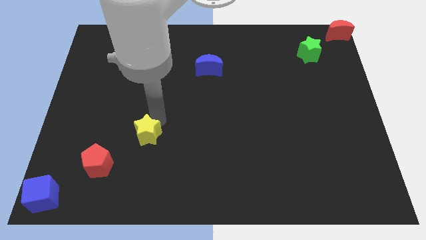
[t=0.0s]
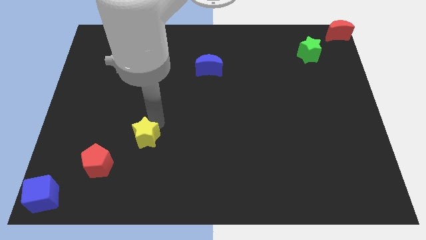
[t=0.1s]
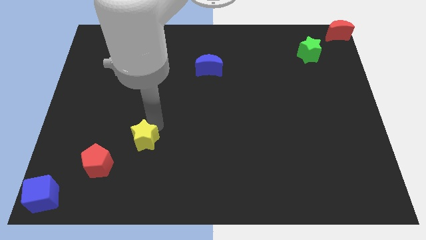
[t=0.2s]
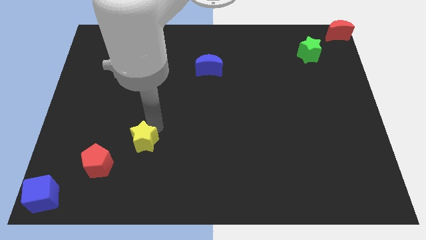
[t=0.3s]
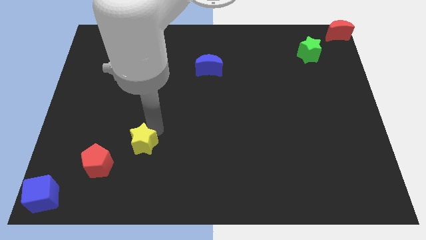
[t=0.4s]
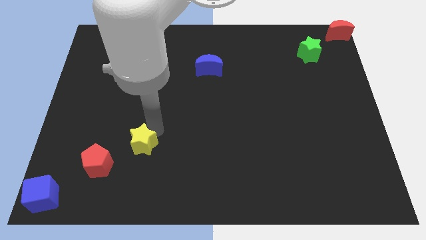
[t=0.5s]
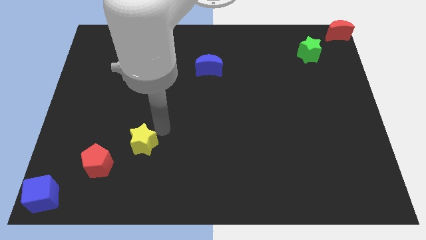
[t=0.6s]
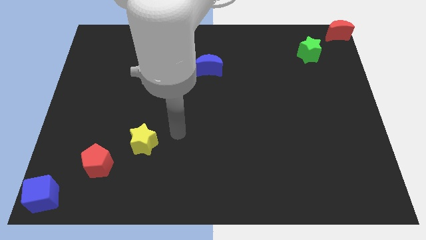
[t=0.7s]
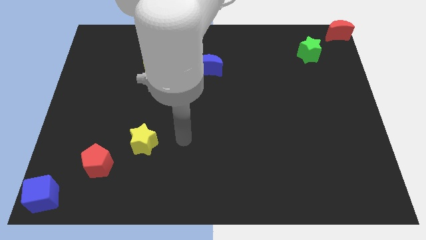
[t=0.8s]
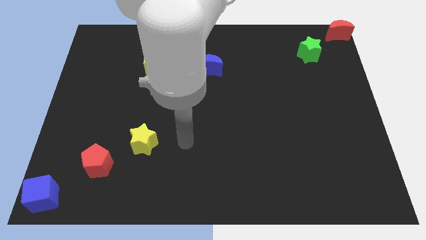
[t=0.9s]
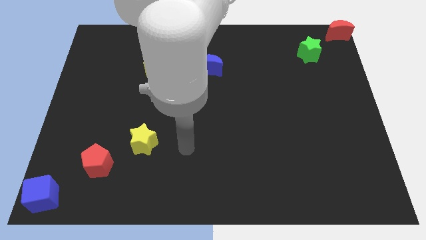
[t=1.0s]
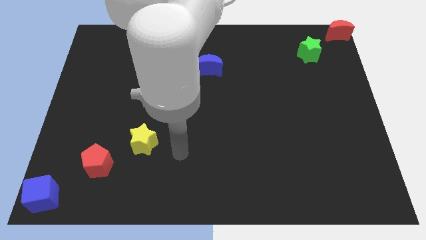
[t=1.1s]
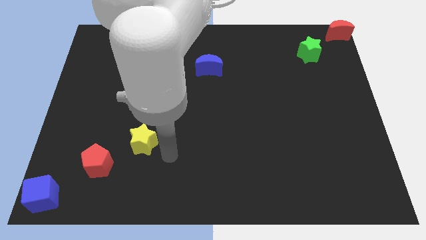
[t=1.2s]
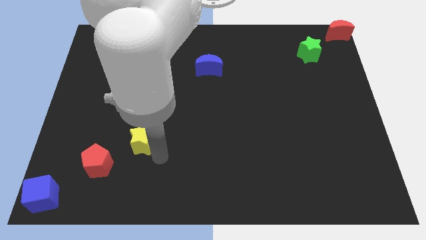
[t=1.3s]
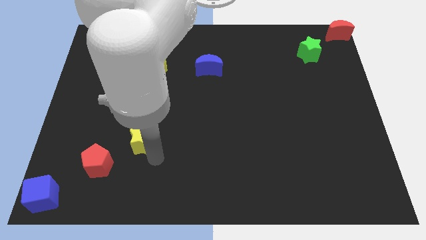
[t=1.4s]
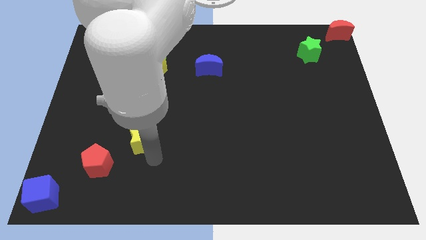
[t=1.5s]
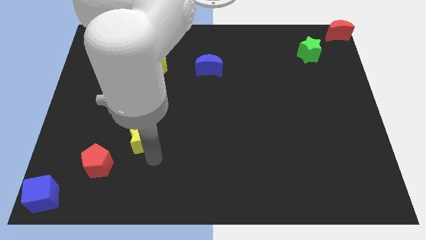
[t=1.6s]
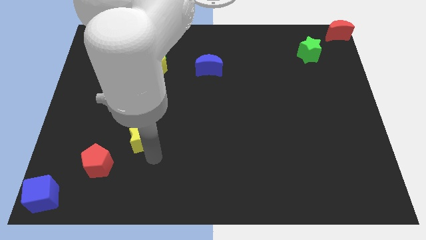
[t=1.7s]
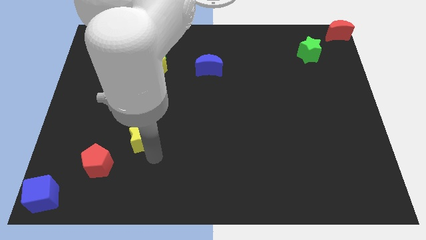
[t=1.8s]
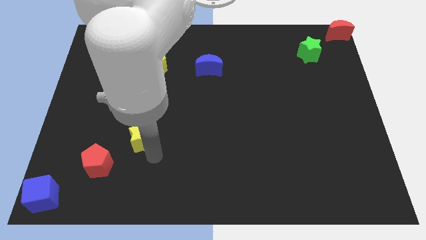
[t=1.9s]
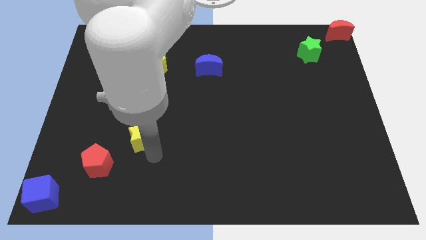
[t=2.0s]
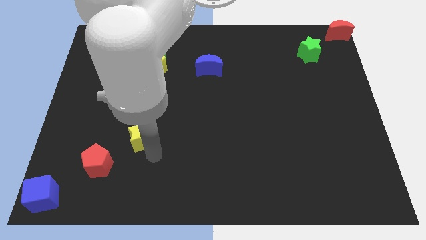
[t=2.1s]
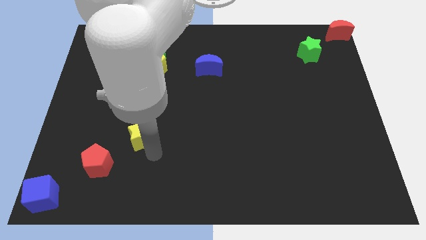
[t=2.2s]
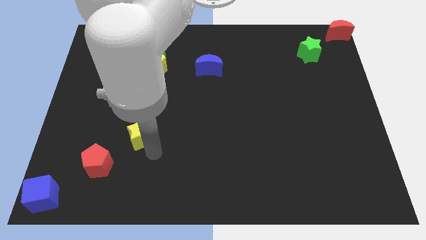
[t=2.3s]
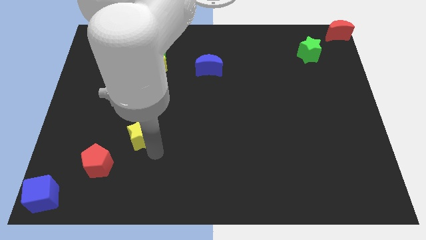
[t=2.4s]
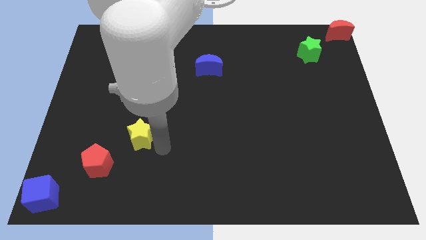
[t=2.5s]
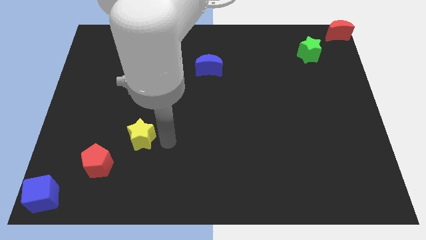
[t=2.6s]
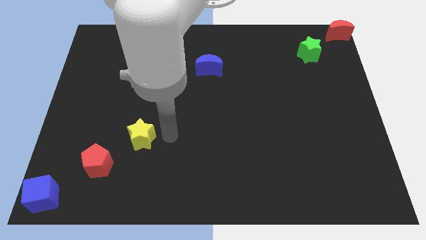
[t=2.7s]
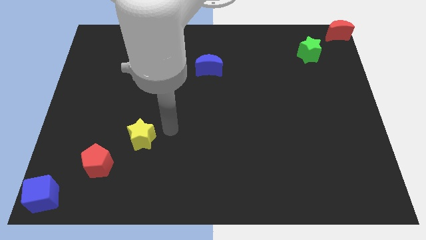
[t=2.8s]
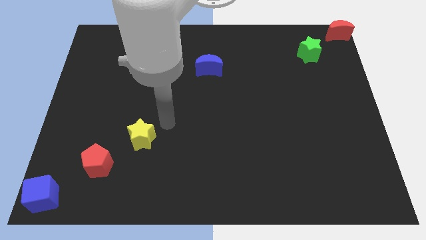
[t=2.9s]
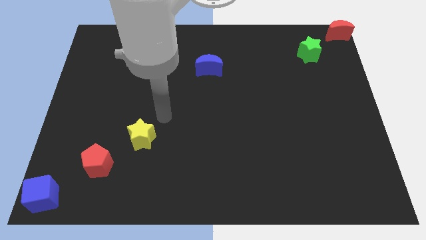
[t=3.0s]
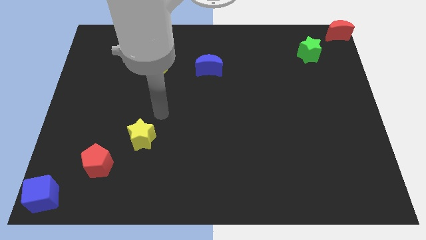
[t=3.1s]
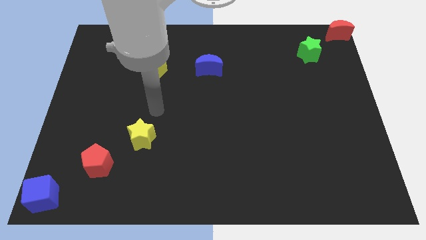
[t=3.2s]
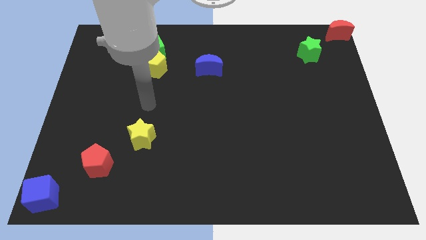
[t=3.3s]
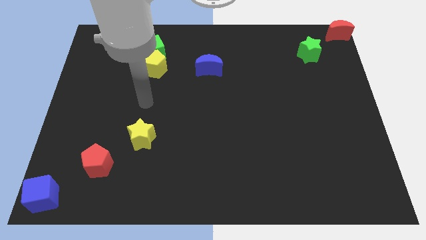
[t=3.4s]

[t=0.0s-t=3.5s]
place the yellow star in a diagonal line at the bottom

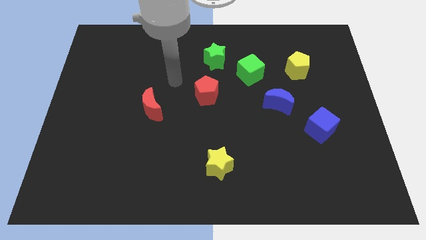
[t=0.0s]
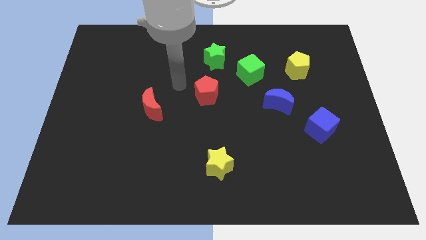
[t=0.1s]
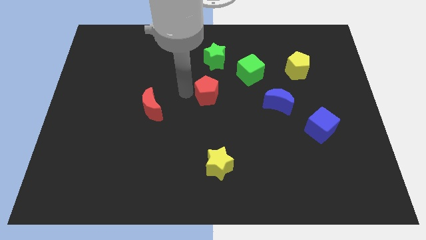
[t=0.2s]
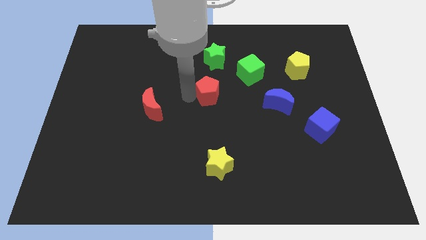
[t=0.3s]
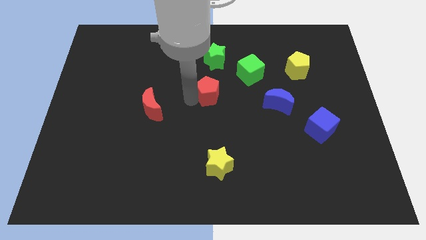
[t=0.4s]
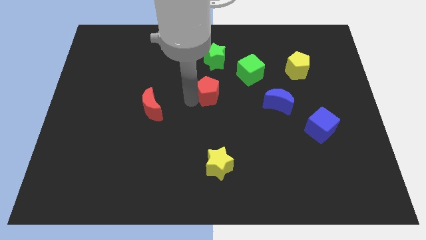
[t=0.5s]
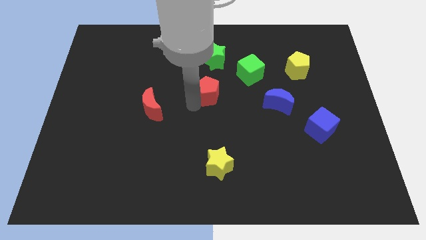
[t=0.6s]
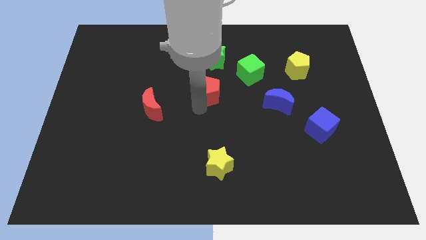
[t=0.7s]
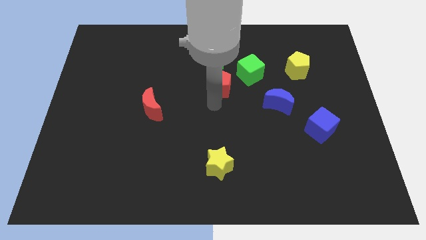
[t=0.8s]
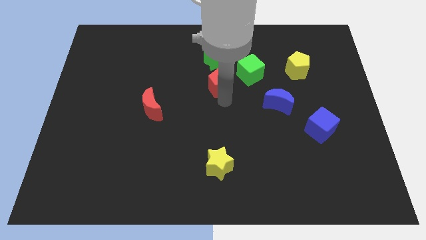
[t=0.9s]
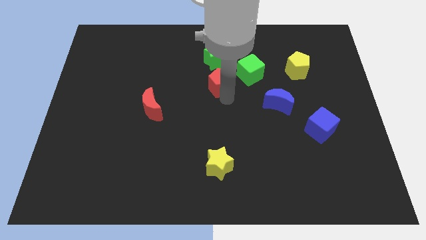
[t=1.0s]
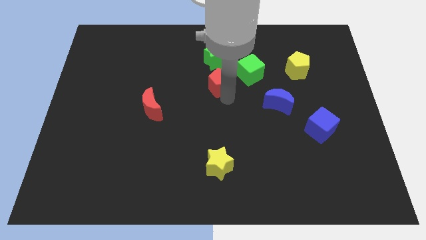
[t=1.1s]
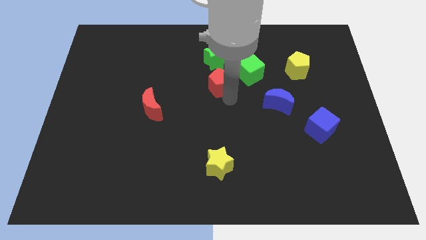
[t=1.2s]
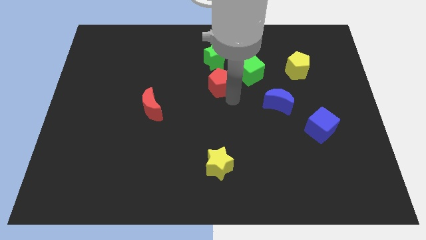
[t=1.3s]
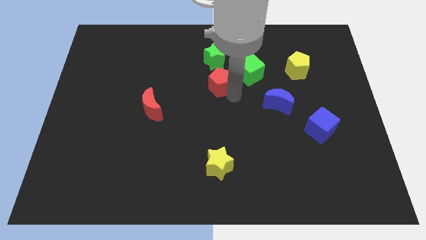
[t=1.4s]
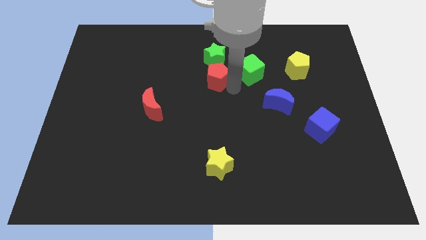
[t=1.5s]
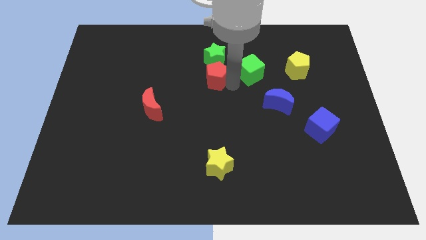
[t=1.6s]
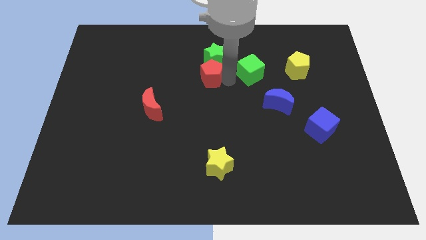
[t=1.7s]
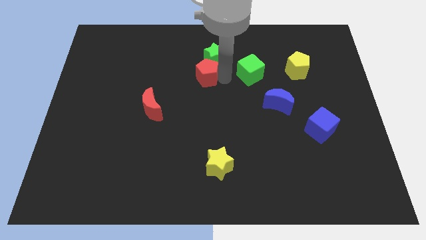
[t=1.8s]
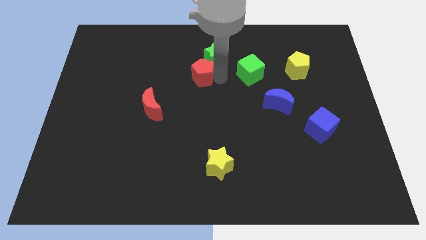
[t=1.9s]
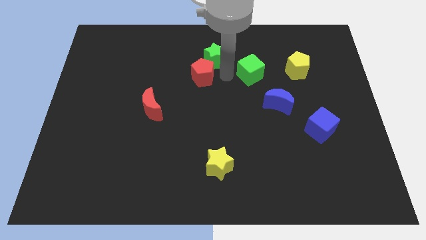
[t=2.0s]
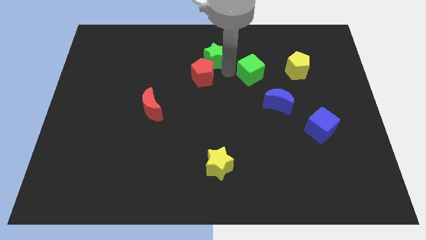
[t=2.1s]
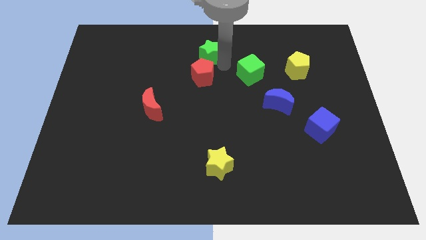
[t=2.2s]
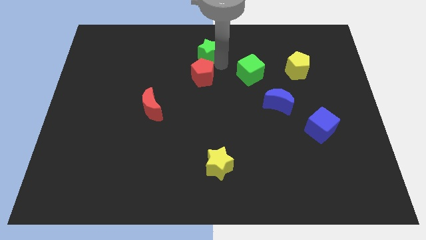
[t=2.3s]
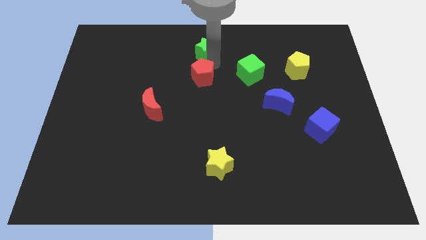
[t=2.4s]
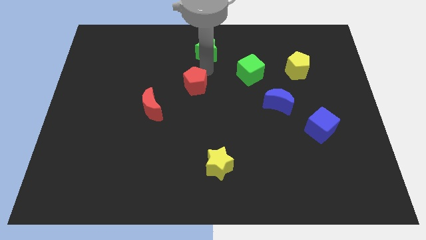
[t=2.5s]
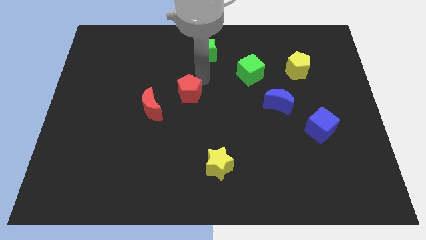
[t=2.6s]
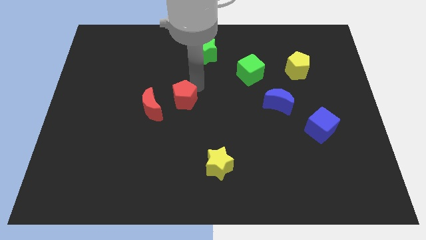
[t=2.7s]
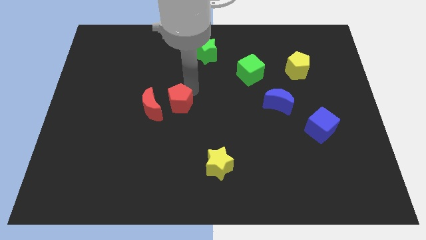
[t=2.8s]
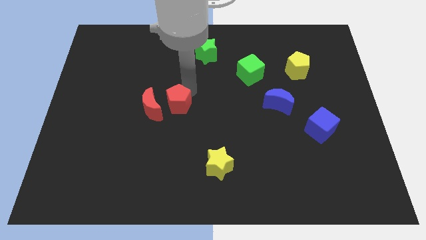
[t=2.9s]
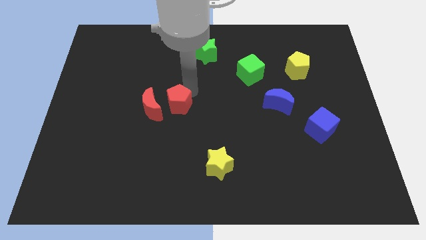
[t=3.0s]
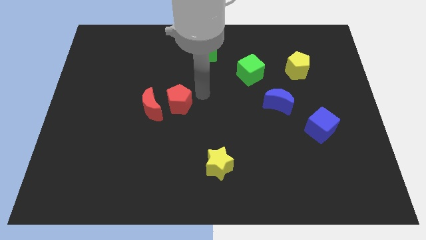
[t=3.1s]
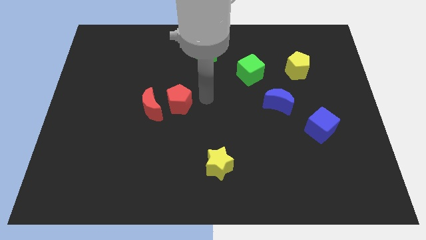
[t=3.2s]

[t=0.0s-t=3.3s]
move the red pentagon to the left of the red moon

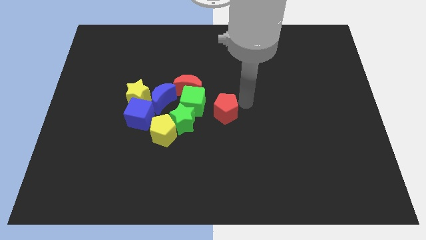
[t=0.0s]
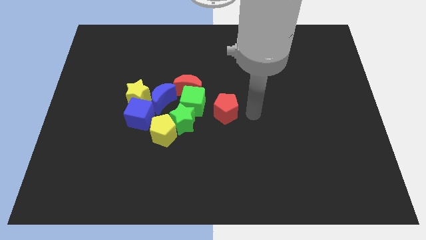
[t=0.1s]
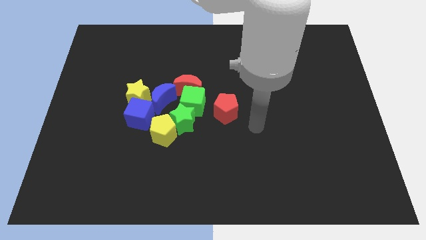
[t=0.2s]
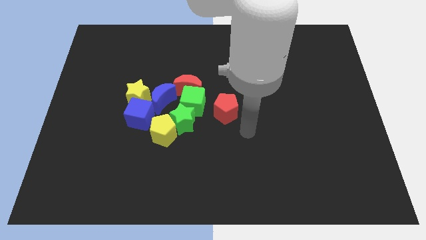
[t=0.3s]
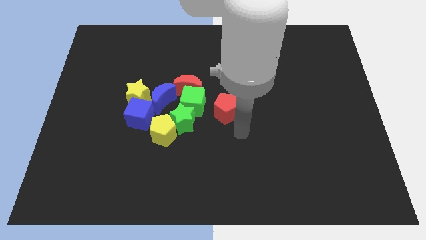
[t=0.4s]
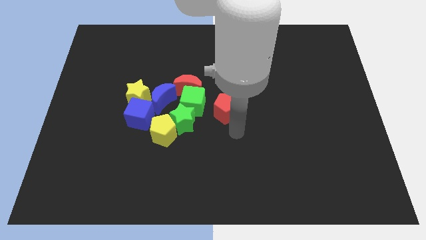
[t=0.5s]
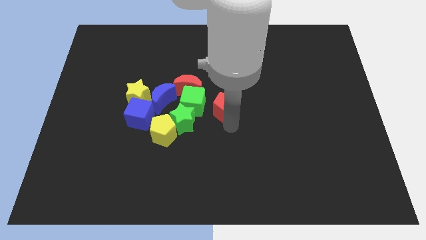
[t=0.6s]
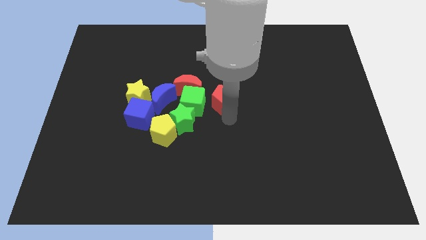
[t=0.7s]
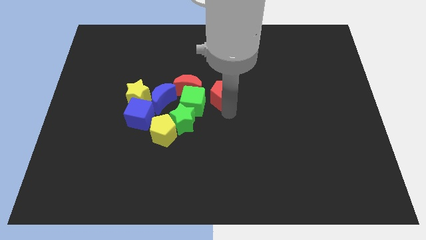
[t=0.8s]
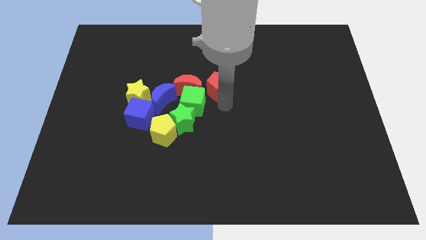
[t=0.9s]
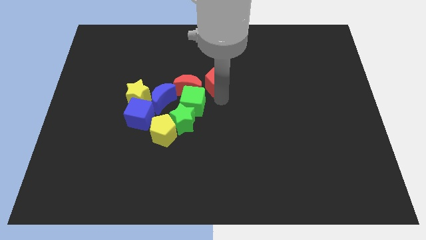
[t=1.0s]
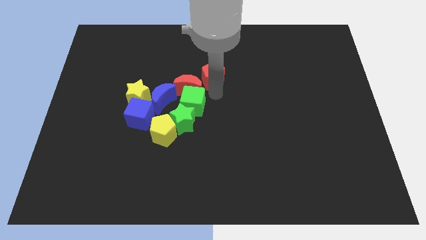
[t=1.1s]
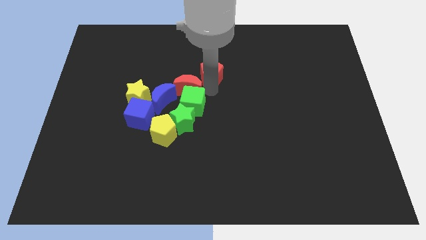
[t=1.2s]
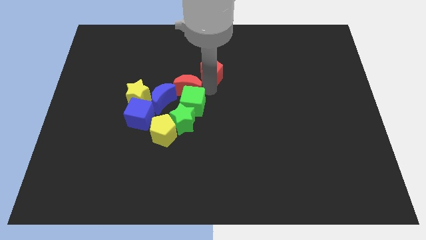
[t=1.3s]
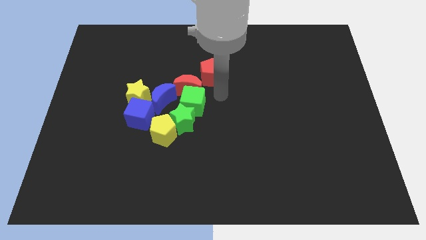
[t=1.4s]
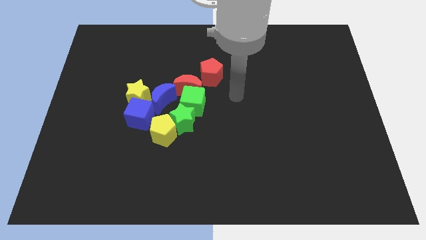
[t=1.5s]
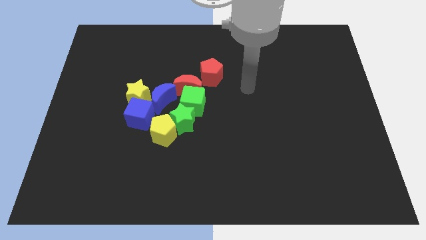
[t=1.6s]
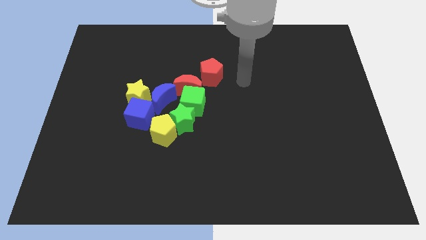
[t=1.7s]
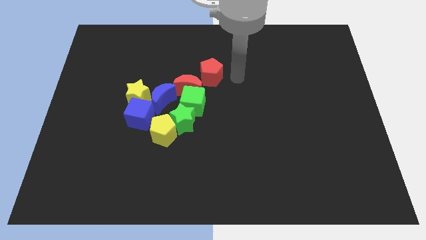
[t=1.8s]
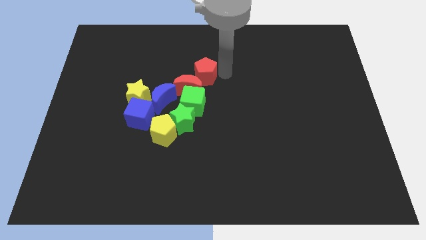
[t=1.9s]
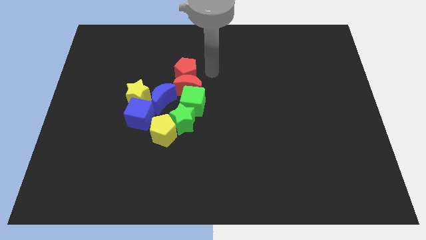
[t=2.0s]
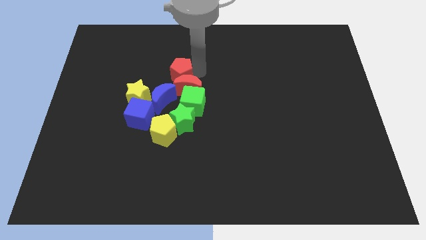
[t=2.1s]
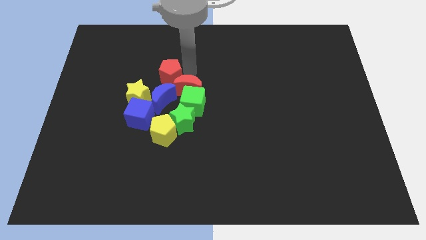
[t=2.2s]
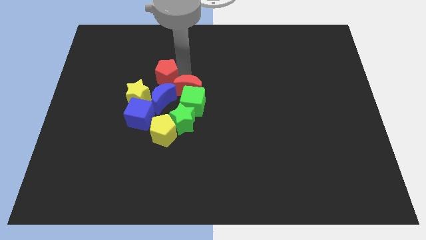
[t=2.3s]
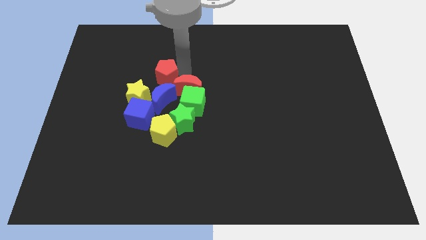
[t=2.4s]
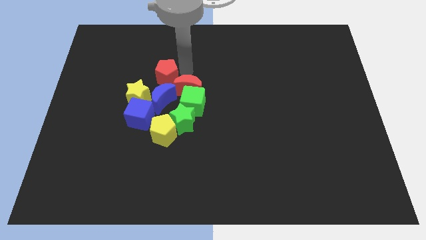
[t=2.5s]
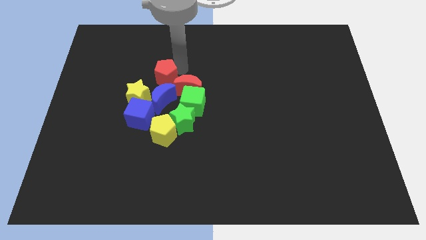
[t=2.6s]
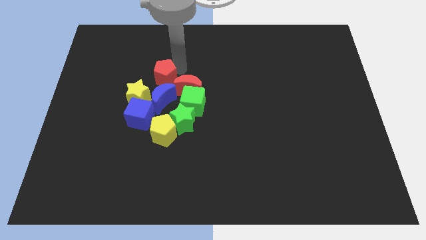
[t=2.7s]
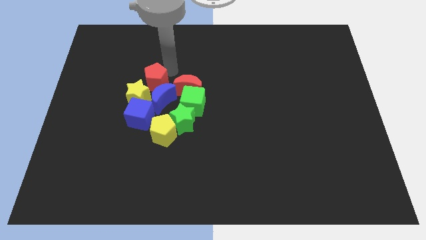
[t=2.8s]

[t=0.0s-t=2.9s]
place the red pentagon above the blue moon
